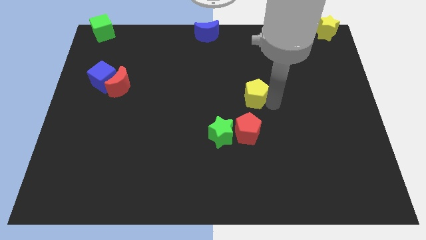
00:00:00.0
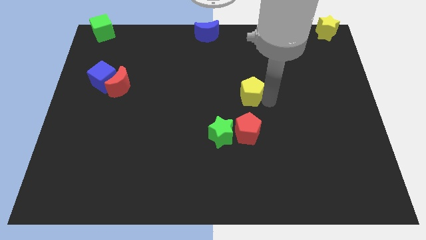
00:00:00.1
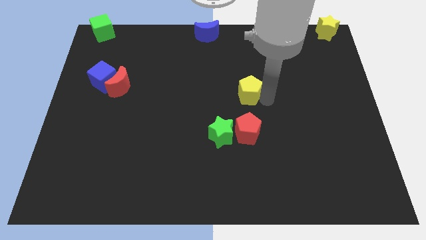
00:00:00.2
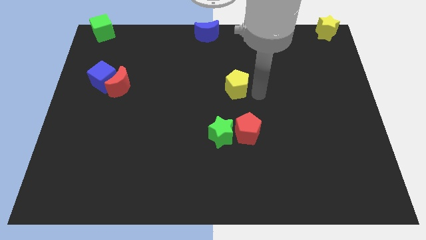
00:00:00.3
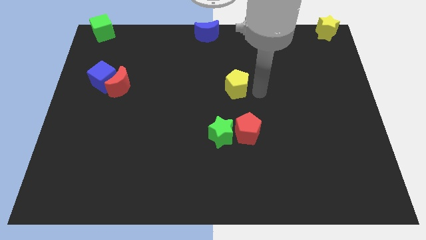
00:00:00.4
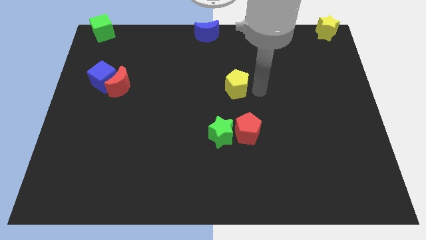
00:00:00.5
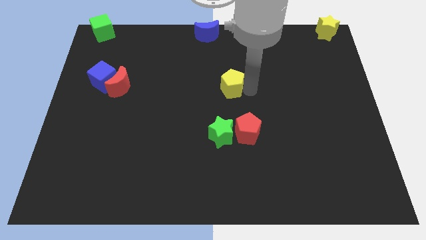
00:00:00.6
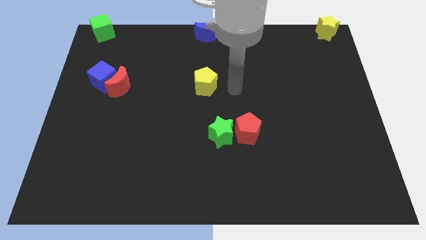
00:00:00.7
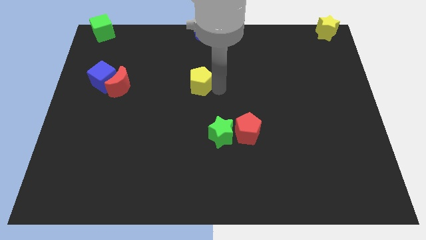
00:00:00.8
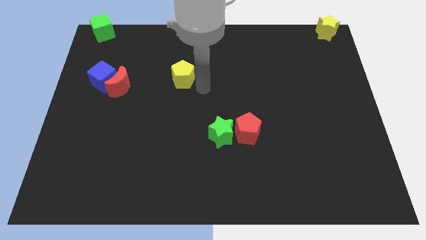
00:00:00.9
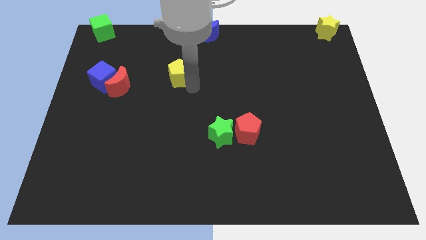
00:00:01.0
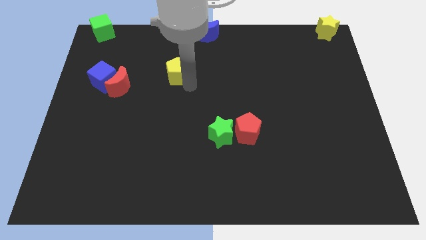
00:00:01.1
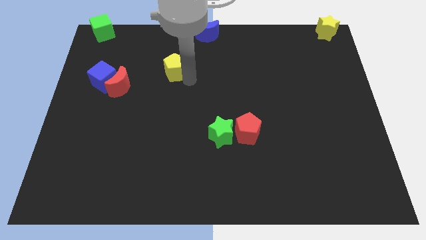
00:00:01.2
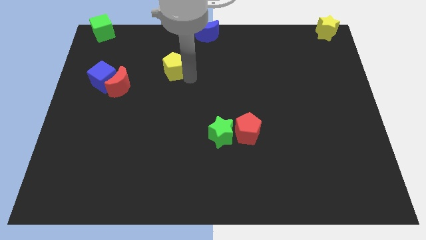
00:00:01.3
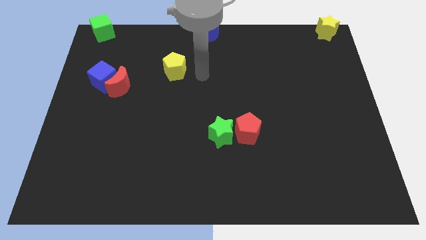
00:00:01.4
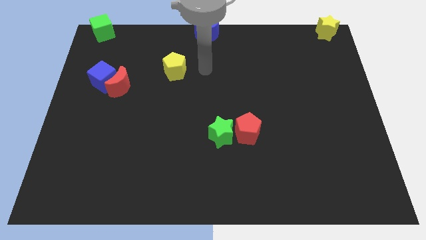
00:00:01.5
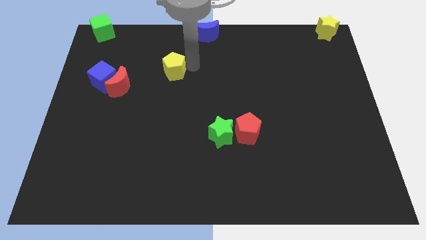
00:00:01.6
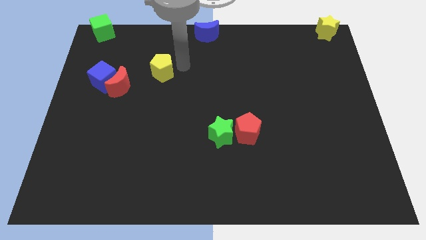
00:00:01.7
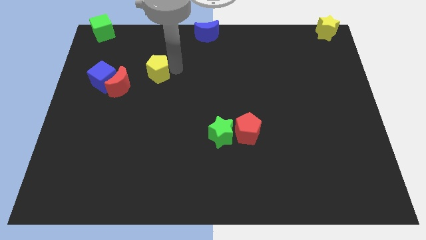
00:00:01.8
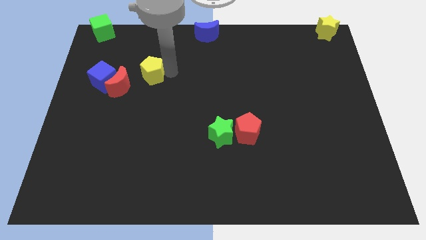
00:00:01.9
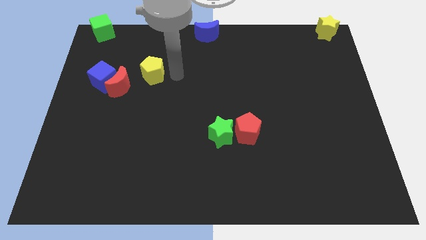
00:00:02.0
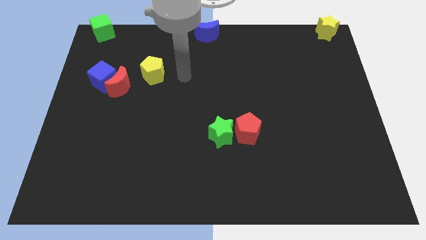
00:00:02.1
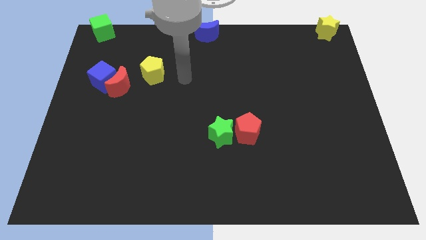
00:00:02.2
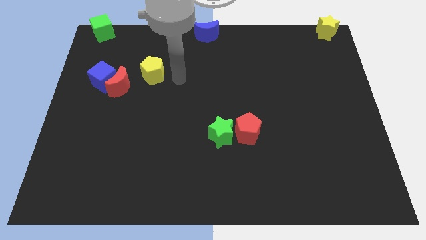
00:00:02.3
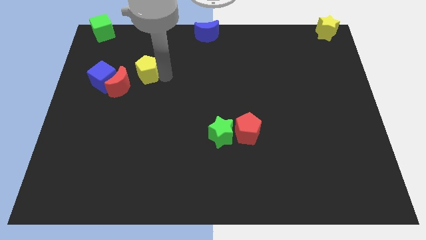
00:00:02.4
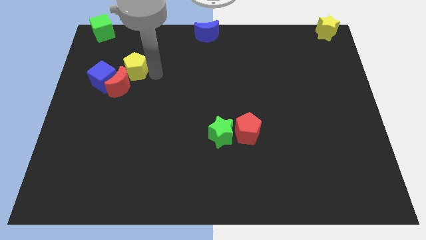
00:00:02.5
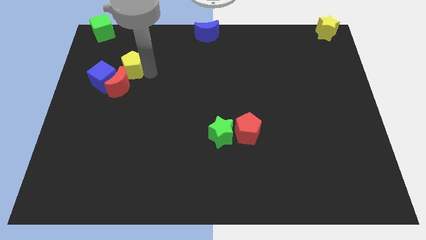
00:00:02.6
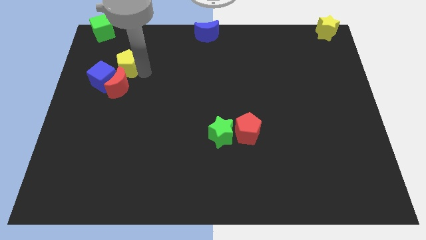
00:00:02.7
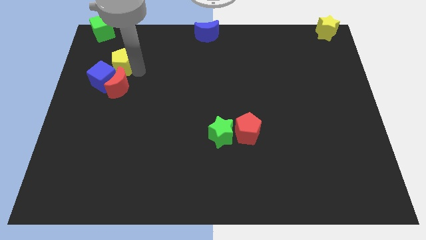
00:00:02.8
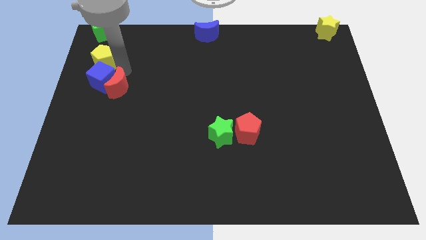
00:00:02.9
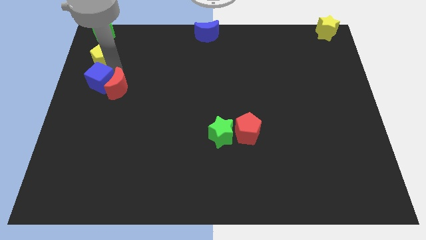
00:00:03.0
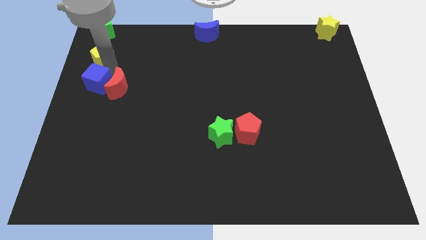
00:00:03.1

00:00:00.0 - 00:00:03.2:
place the yellow pentagon above the blue cube

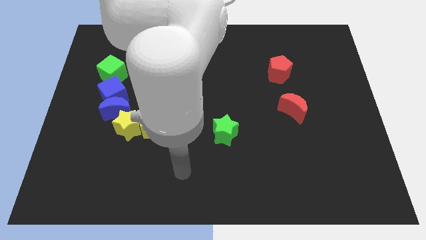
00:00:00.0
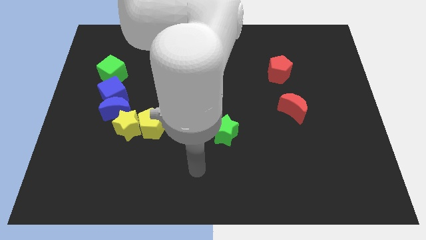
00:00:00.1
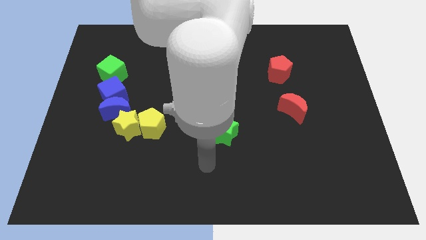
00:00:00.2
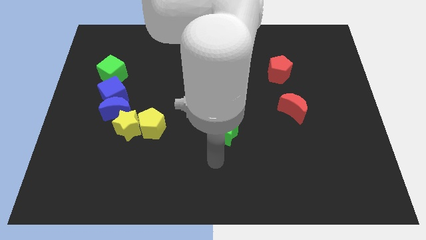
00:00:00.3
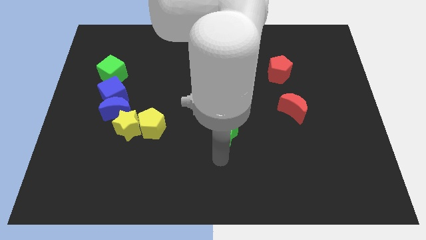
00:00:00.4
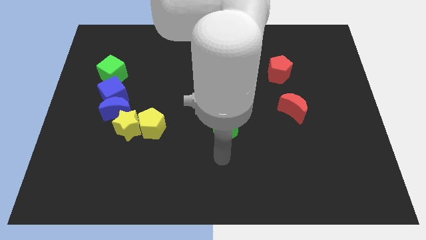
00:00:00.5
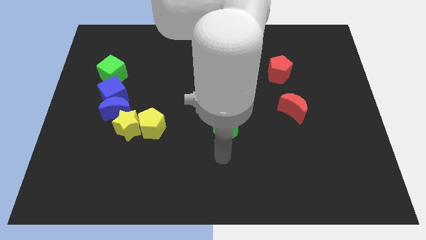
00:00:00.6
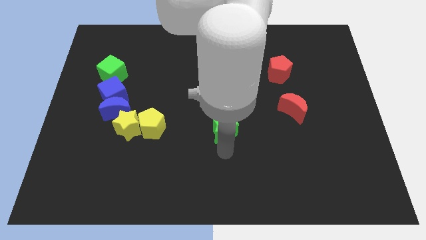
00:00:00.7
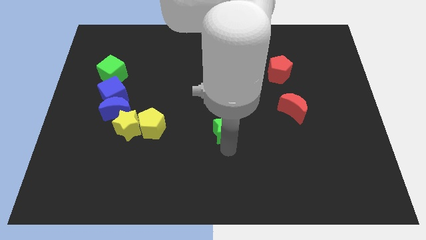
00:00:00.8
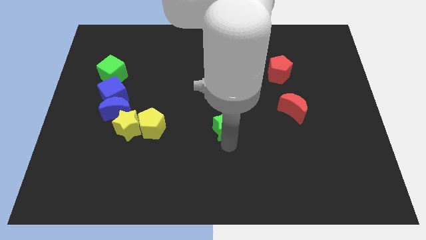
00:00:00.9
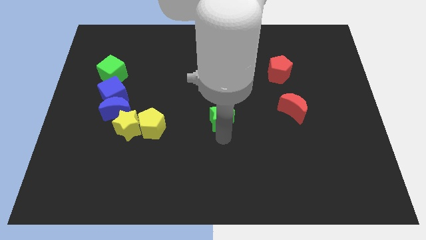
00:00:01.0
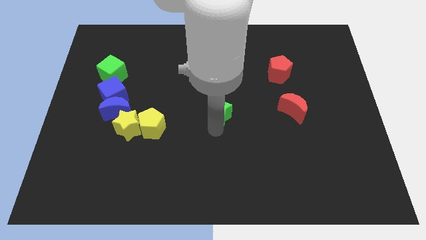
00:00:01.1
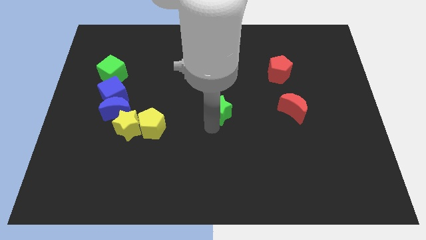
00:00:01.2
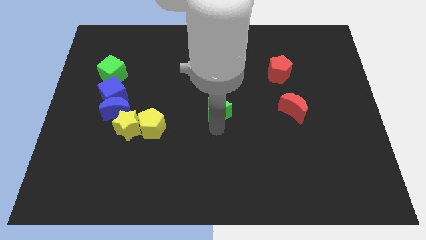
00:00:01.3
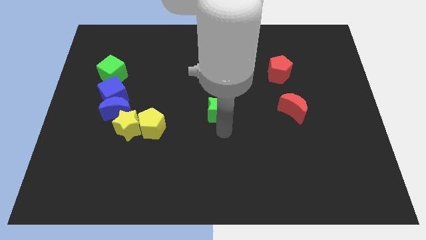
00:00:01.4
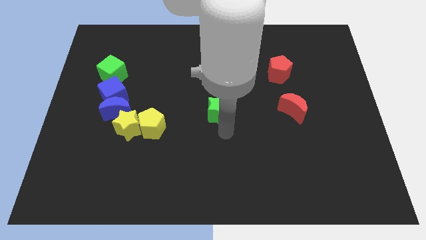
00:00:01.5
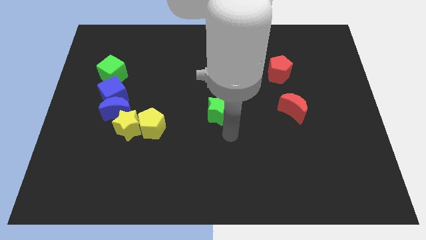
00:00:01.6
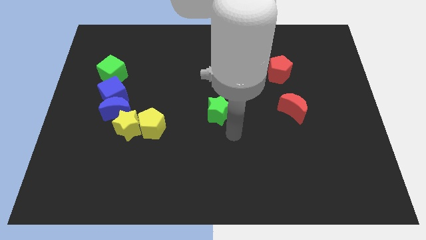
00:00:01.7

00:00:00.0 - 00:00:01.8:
move the green star to the middle of the board

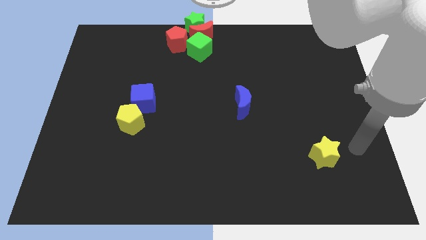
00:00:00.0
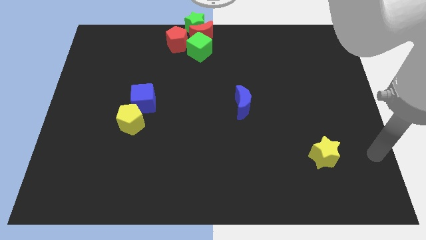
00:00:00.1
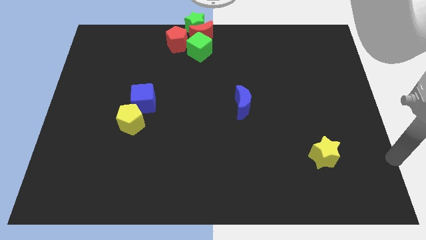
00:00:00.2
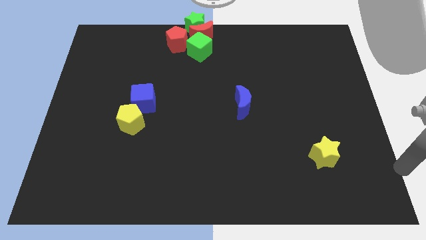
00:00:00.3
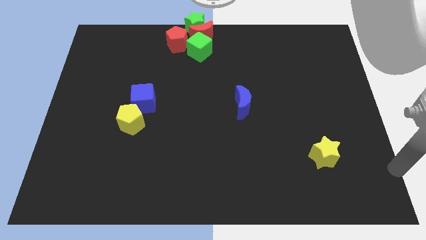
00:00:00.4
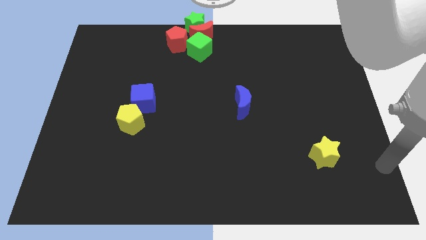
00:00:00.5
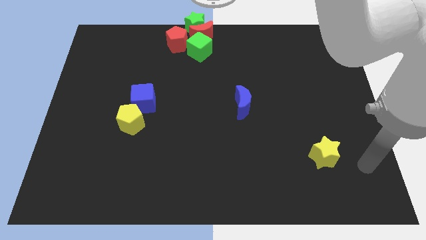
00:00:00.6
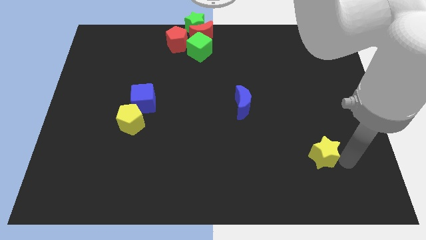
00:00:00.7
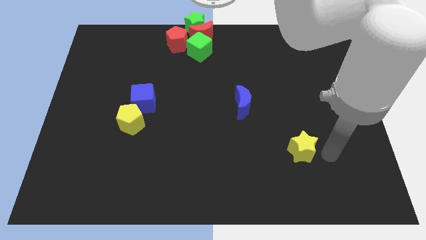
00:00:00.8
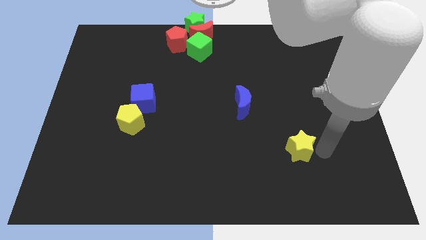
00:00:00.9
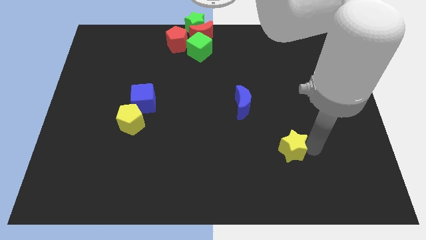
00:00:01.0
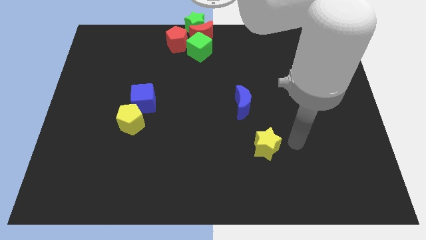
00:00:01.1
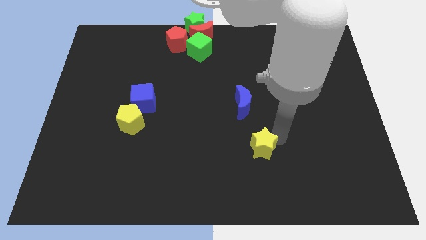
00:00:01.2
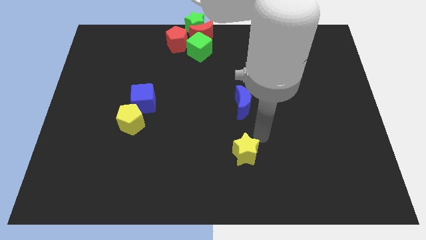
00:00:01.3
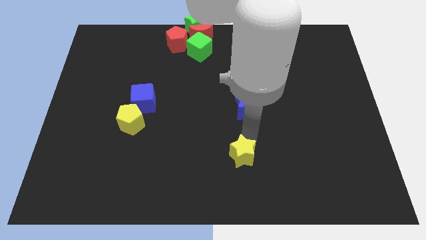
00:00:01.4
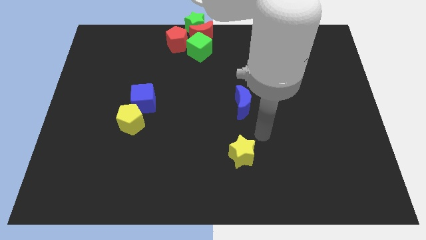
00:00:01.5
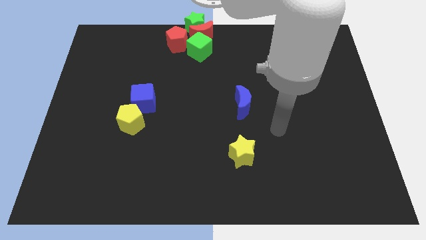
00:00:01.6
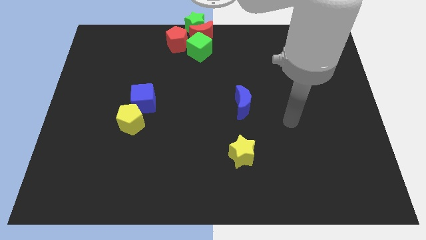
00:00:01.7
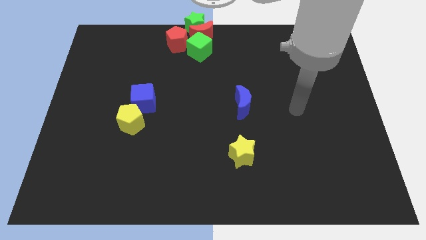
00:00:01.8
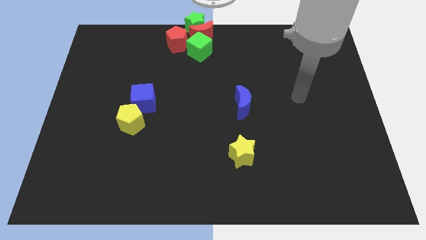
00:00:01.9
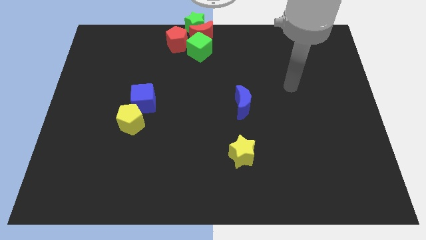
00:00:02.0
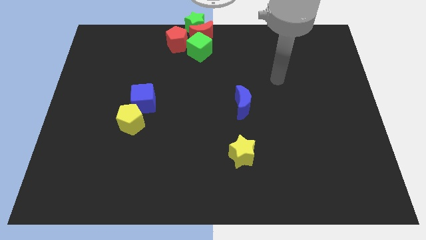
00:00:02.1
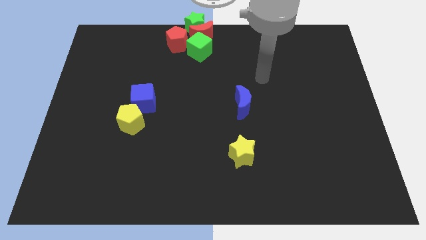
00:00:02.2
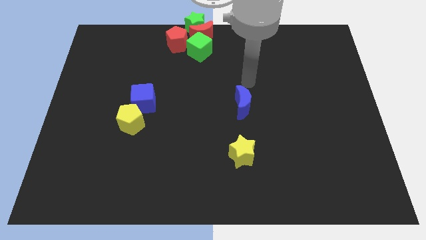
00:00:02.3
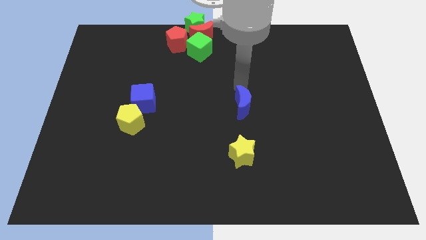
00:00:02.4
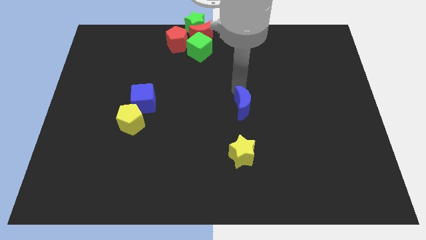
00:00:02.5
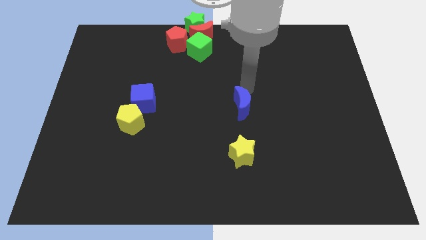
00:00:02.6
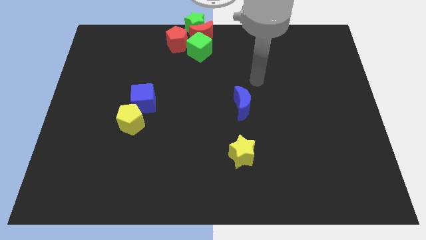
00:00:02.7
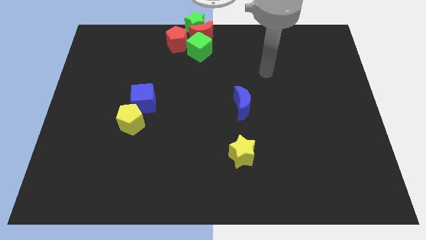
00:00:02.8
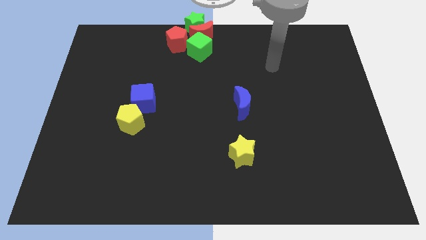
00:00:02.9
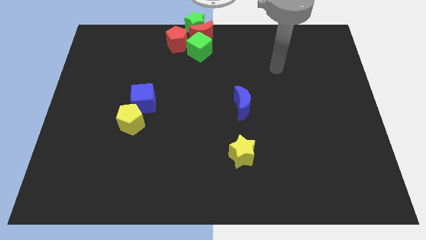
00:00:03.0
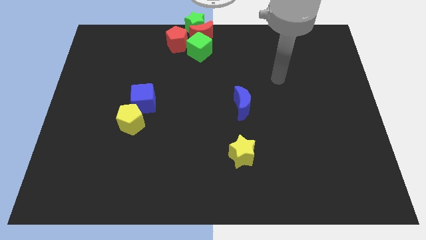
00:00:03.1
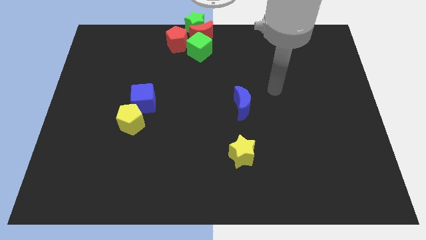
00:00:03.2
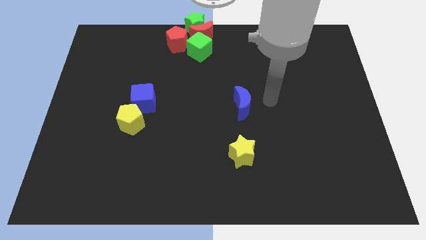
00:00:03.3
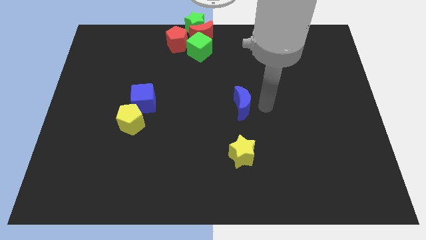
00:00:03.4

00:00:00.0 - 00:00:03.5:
move yellow star below the blue moon

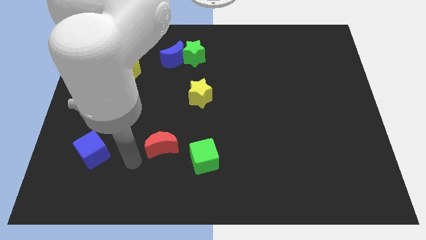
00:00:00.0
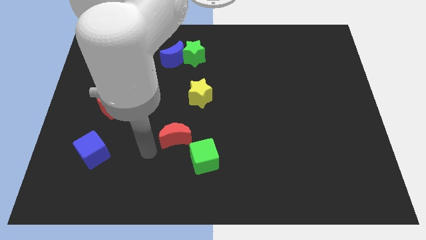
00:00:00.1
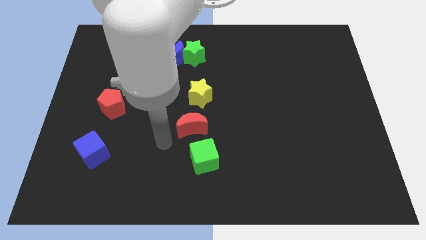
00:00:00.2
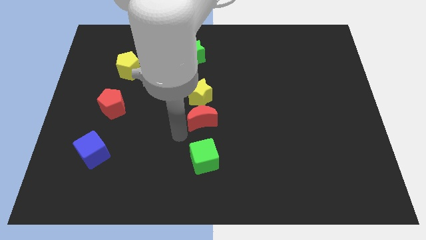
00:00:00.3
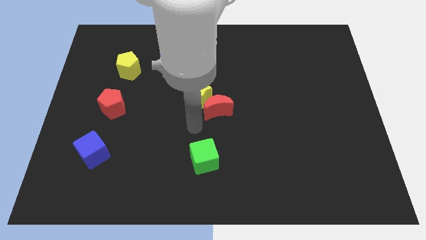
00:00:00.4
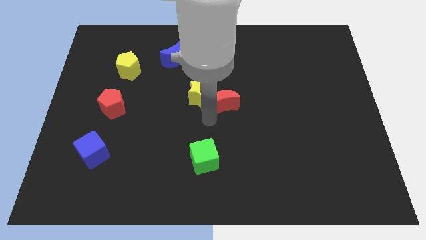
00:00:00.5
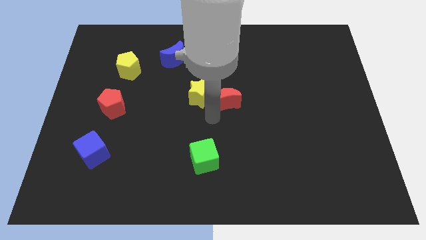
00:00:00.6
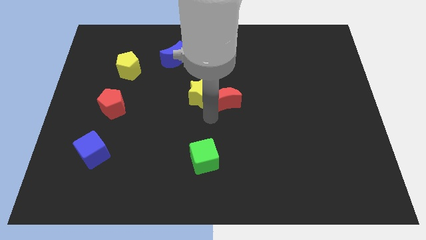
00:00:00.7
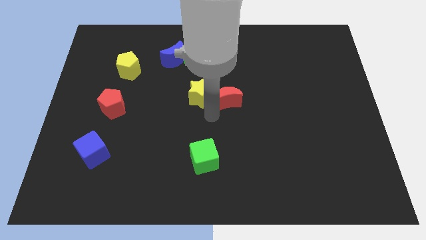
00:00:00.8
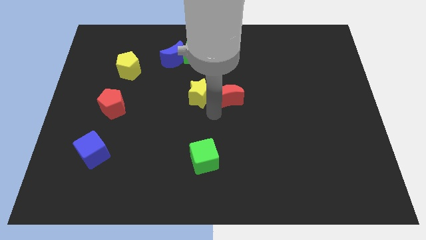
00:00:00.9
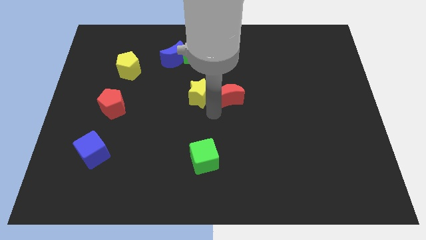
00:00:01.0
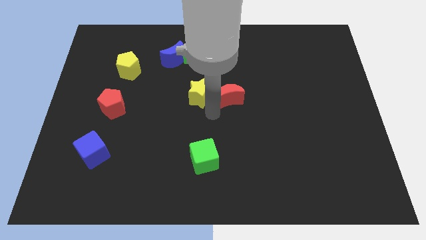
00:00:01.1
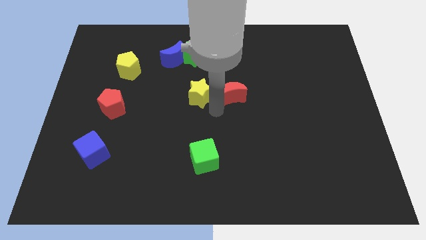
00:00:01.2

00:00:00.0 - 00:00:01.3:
place the red moon right to the yellow star
